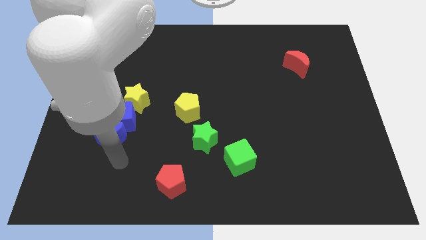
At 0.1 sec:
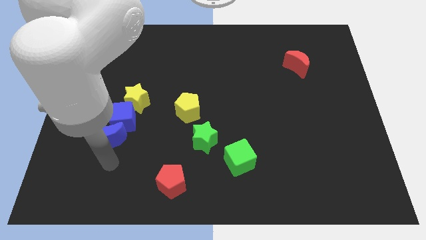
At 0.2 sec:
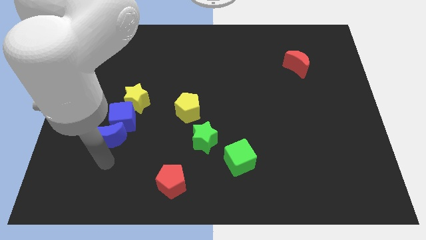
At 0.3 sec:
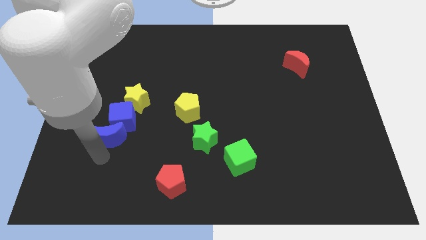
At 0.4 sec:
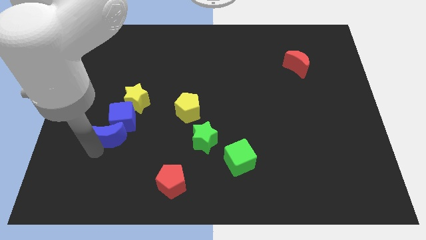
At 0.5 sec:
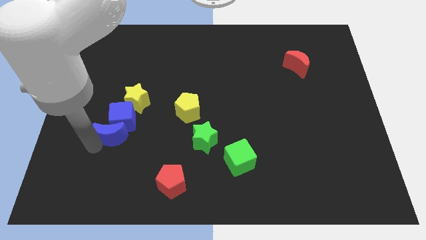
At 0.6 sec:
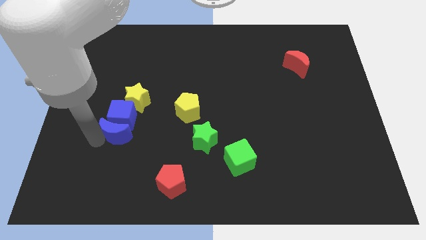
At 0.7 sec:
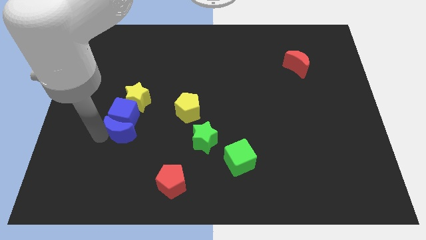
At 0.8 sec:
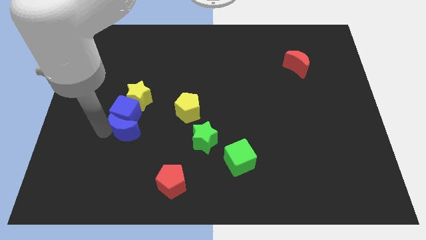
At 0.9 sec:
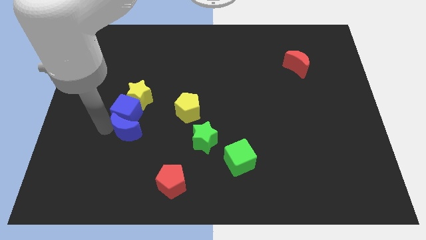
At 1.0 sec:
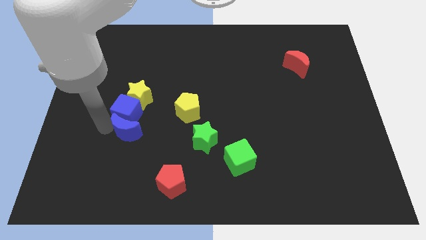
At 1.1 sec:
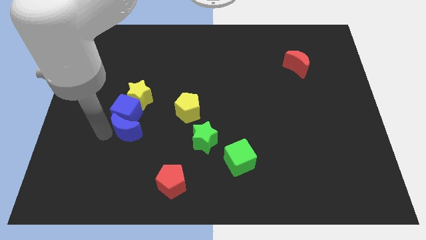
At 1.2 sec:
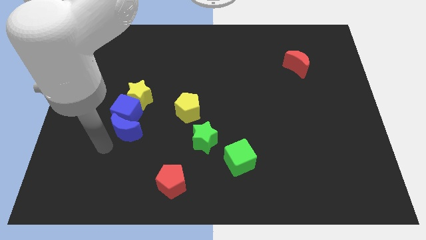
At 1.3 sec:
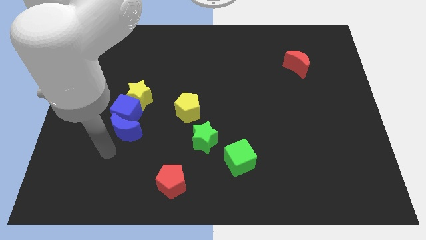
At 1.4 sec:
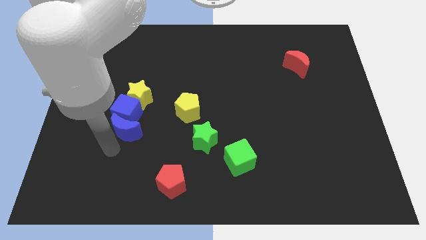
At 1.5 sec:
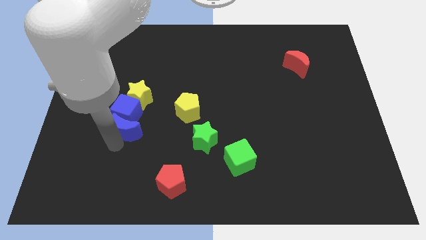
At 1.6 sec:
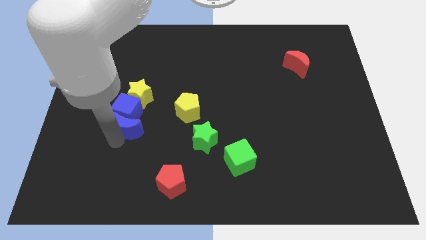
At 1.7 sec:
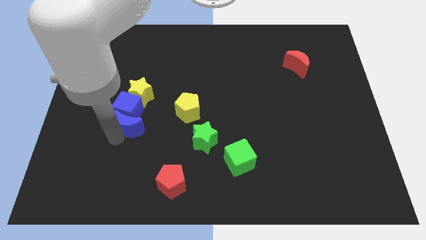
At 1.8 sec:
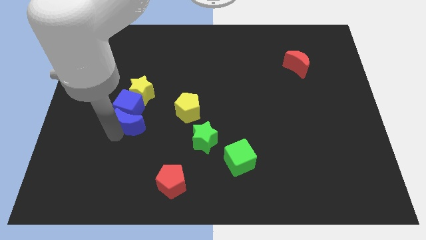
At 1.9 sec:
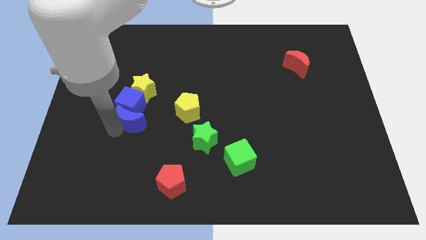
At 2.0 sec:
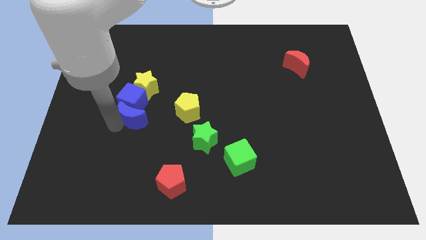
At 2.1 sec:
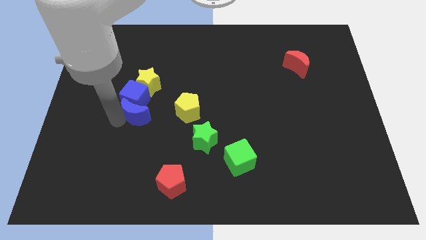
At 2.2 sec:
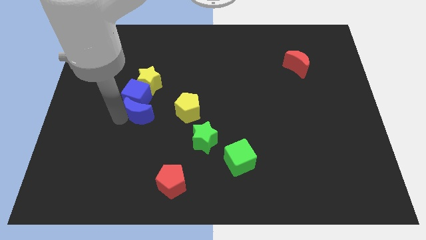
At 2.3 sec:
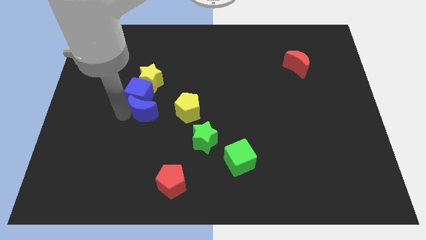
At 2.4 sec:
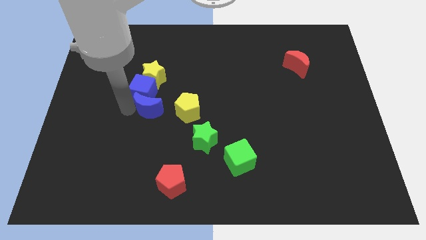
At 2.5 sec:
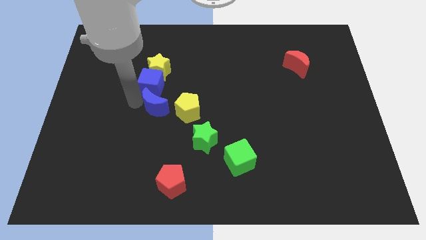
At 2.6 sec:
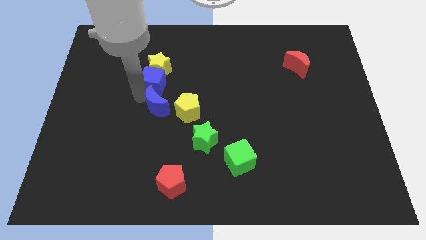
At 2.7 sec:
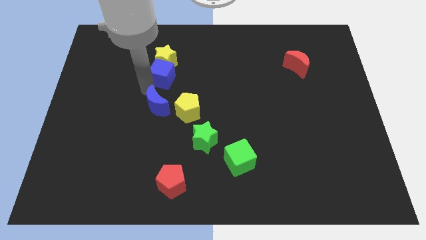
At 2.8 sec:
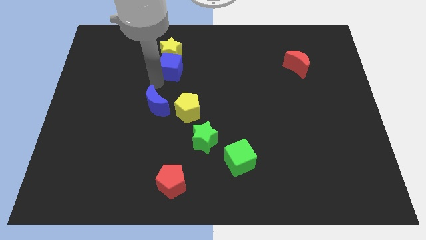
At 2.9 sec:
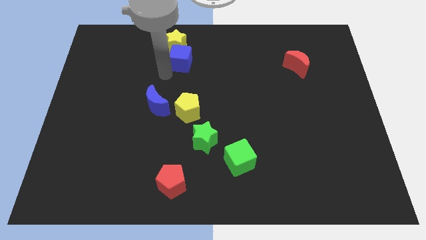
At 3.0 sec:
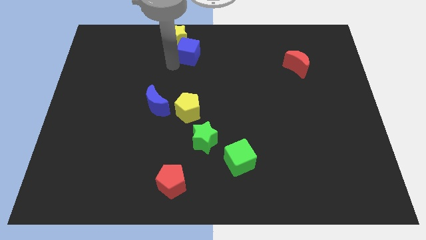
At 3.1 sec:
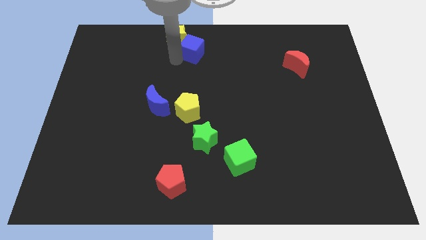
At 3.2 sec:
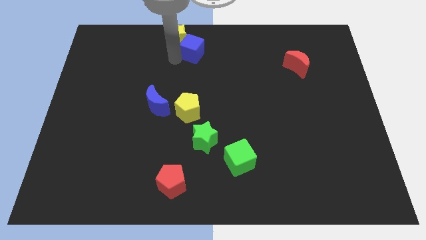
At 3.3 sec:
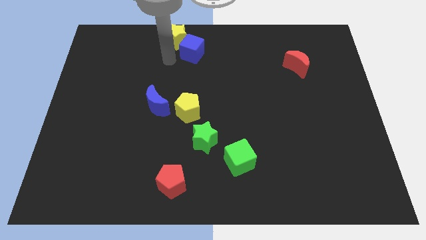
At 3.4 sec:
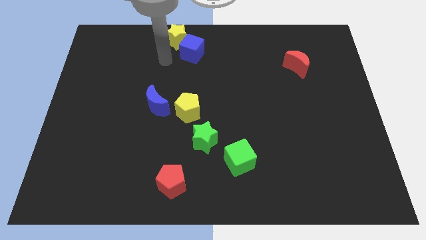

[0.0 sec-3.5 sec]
separate the yellow star and blue cube from the blue crescent

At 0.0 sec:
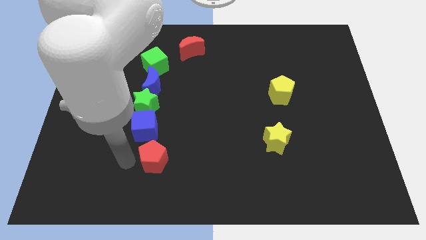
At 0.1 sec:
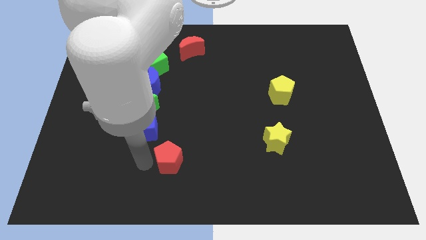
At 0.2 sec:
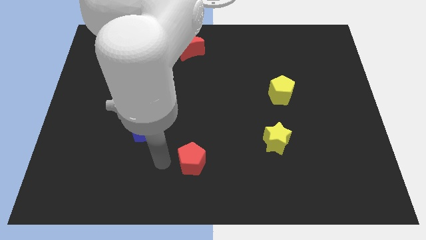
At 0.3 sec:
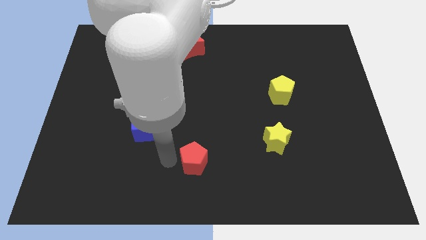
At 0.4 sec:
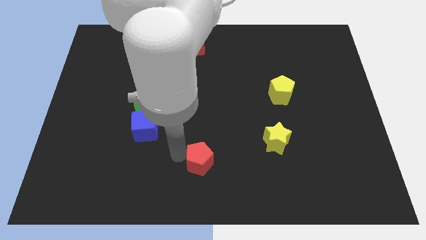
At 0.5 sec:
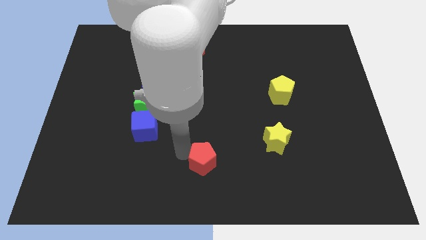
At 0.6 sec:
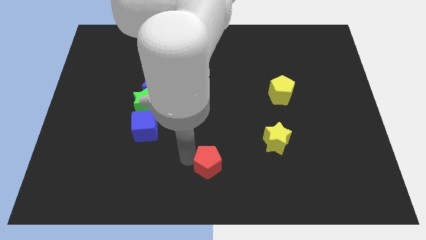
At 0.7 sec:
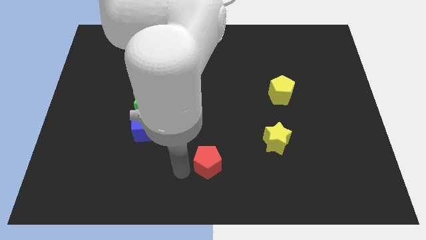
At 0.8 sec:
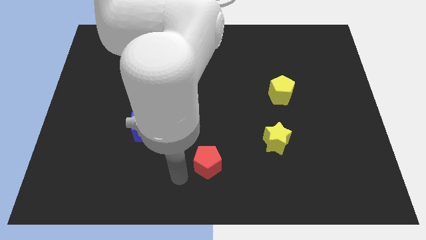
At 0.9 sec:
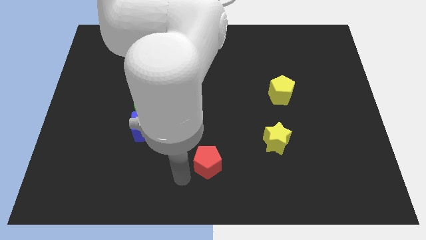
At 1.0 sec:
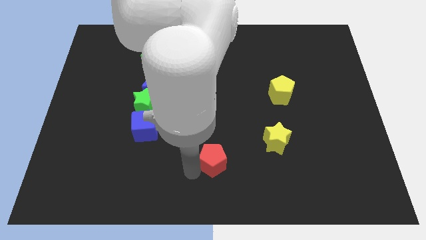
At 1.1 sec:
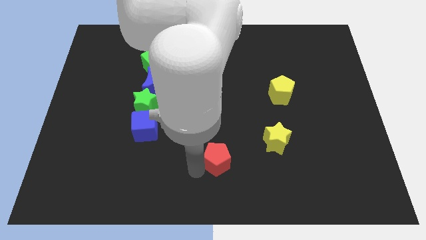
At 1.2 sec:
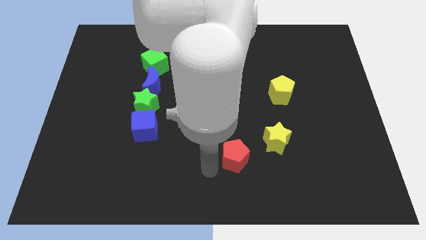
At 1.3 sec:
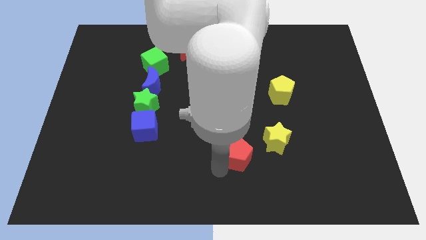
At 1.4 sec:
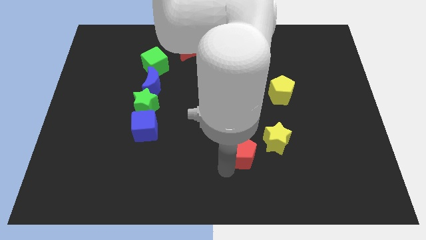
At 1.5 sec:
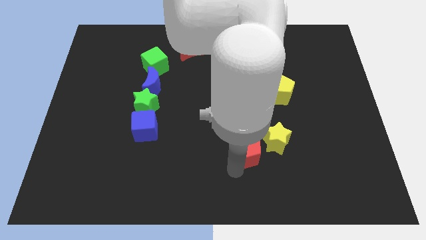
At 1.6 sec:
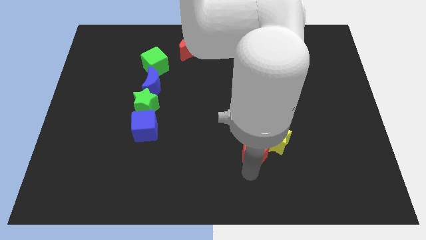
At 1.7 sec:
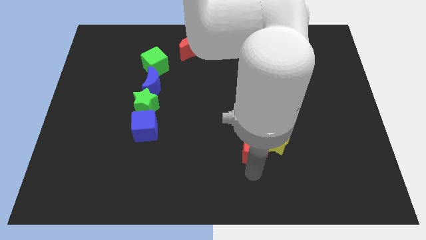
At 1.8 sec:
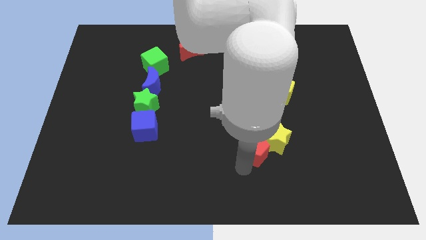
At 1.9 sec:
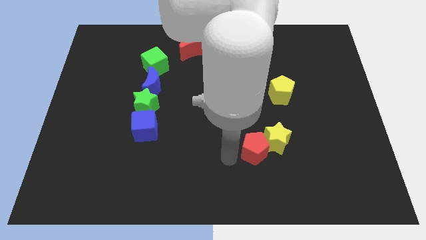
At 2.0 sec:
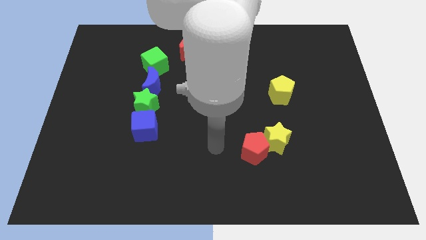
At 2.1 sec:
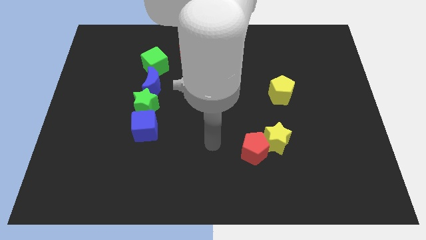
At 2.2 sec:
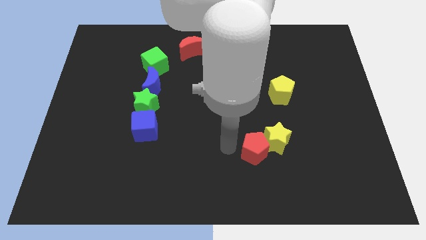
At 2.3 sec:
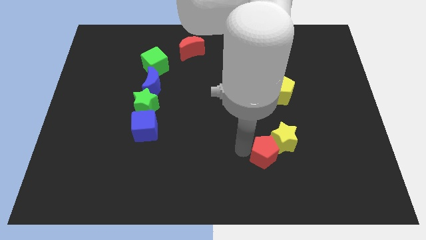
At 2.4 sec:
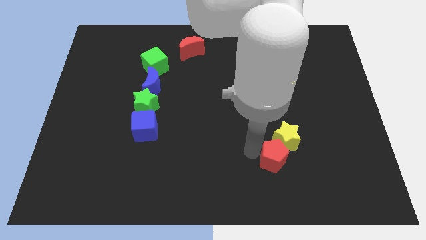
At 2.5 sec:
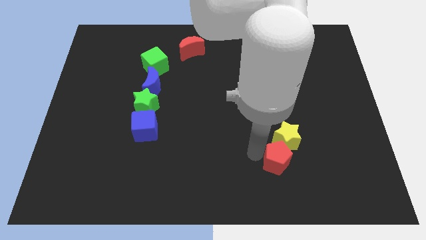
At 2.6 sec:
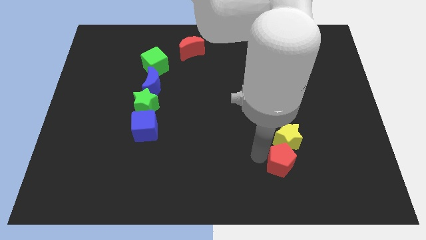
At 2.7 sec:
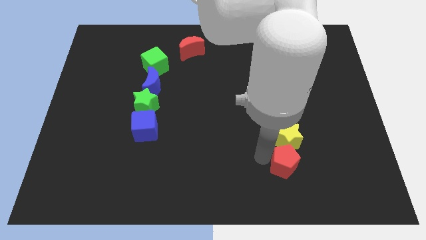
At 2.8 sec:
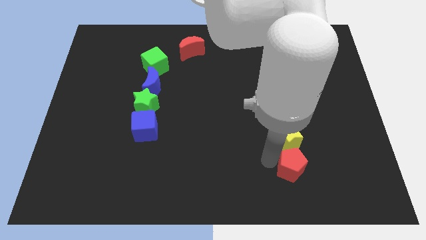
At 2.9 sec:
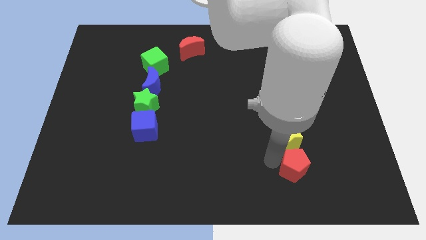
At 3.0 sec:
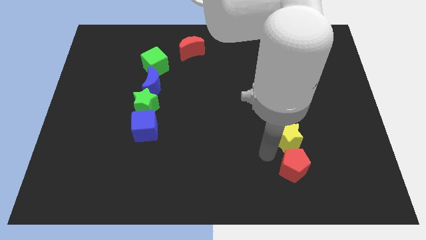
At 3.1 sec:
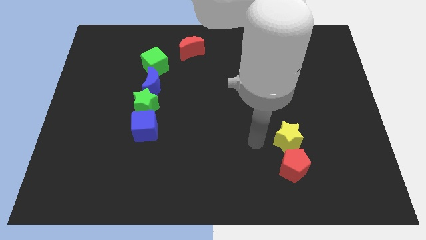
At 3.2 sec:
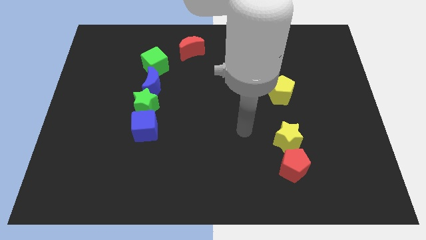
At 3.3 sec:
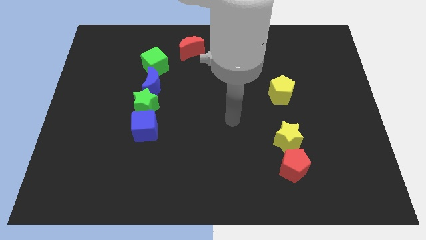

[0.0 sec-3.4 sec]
move red pentagon below yellow star

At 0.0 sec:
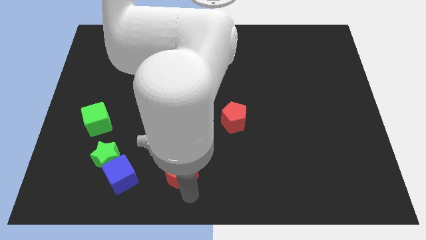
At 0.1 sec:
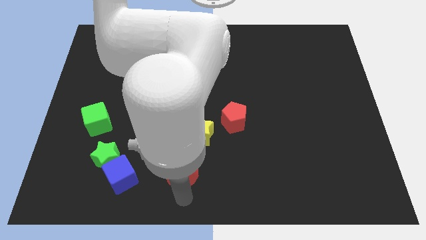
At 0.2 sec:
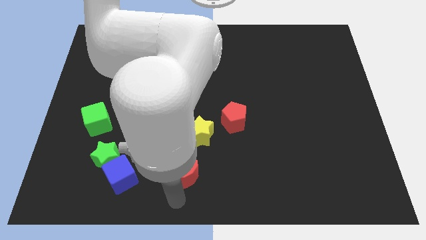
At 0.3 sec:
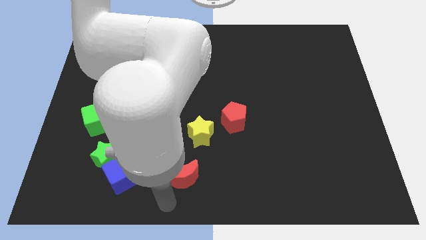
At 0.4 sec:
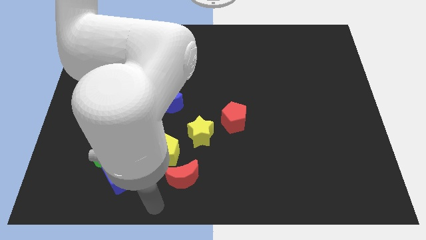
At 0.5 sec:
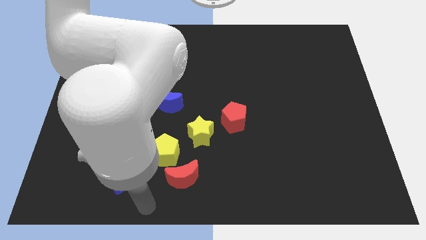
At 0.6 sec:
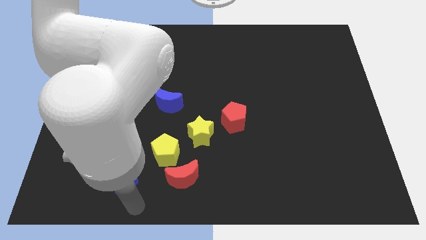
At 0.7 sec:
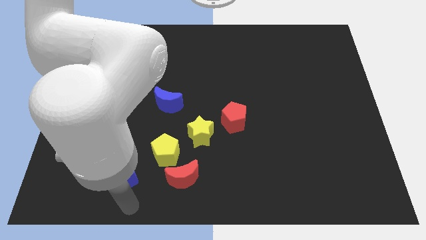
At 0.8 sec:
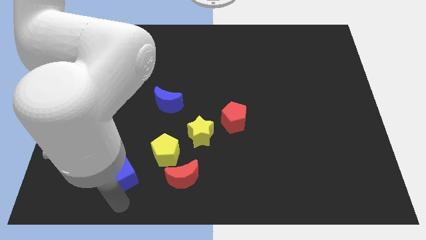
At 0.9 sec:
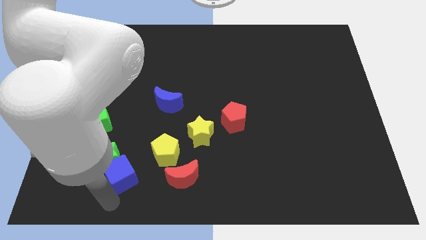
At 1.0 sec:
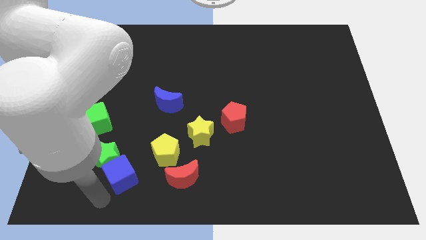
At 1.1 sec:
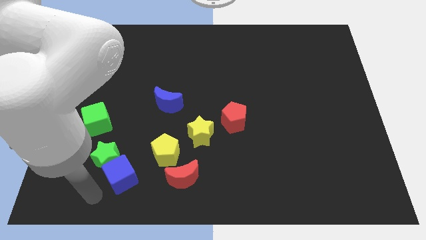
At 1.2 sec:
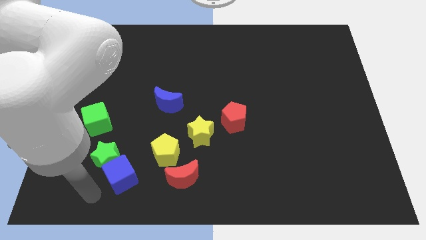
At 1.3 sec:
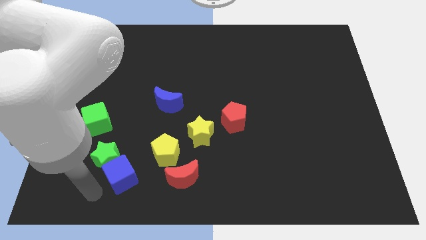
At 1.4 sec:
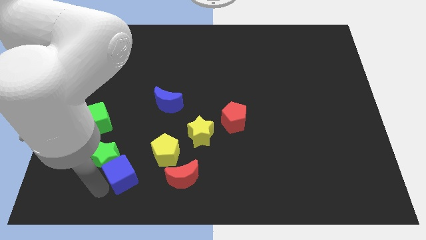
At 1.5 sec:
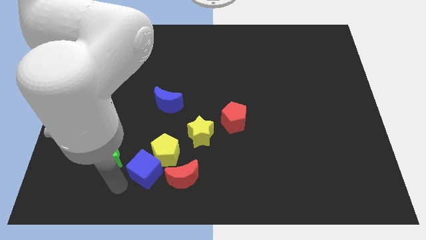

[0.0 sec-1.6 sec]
push the blue cube into the yellow pentagon

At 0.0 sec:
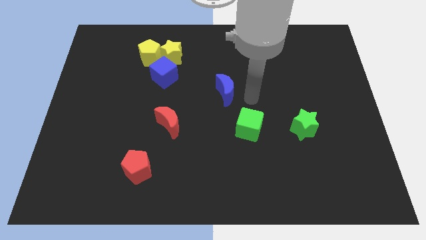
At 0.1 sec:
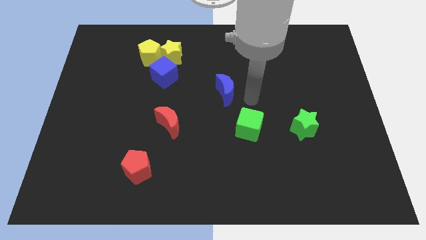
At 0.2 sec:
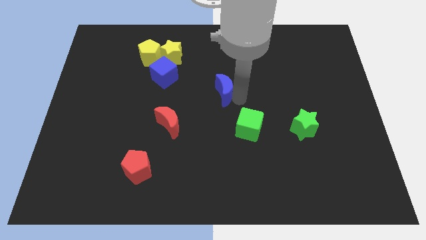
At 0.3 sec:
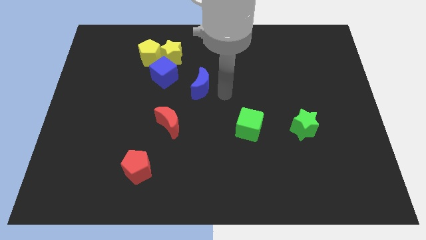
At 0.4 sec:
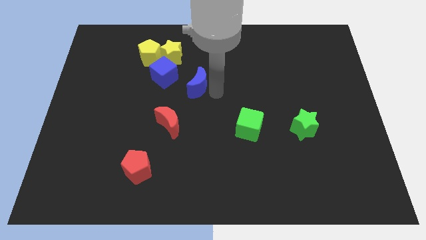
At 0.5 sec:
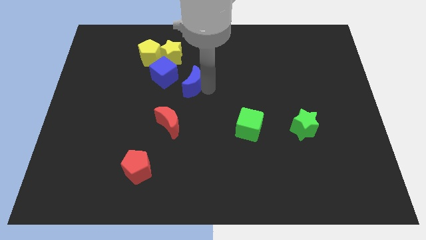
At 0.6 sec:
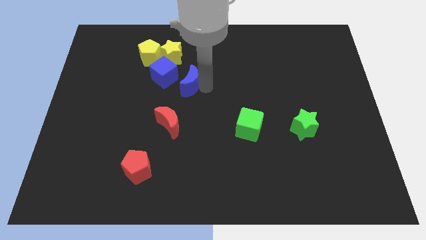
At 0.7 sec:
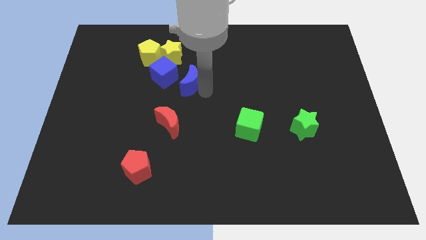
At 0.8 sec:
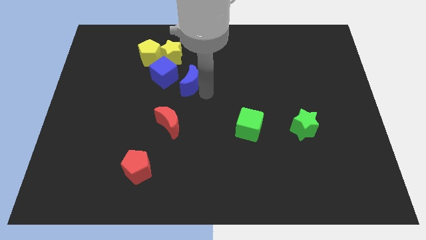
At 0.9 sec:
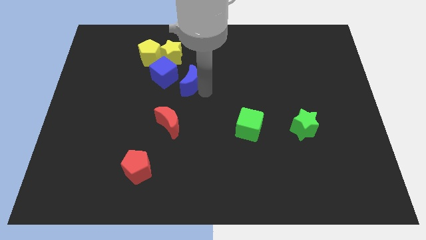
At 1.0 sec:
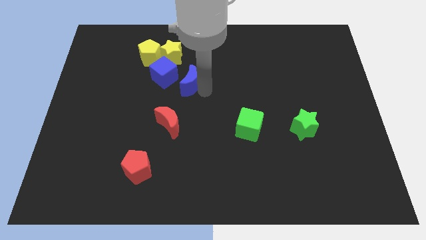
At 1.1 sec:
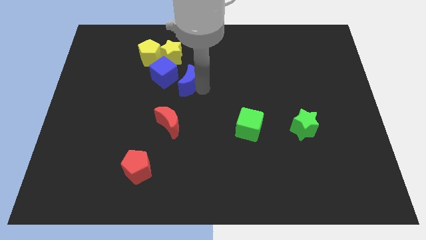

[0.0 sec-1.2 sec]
move the blue moon towards the blue cube
